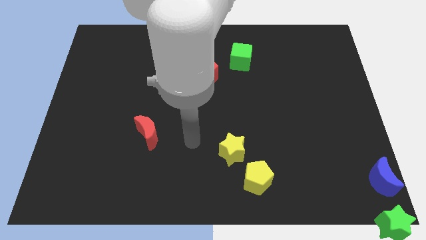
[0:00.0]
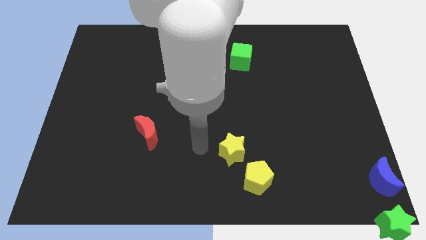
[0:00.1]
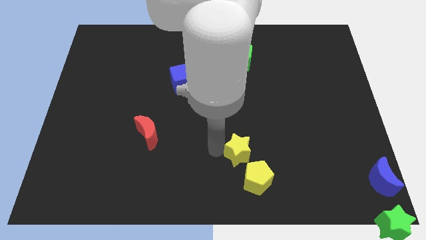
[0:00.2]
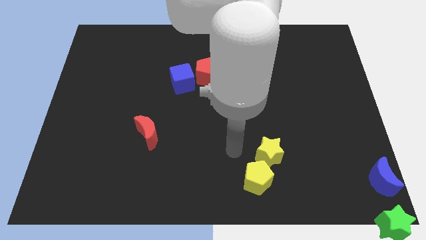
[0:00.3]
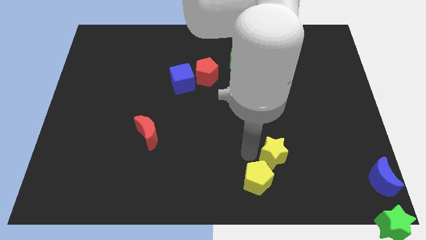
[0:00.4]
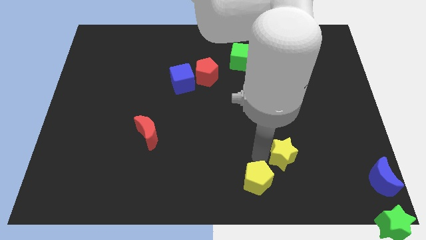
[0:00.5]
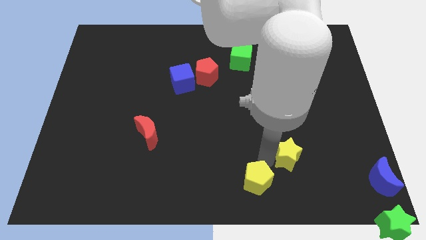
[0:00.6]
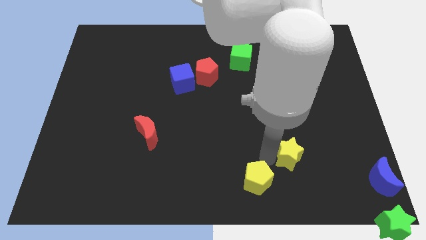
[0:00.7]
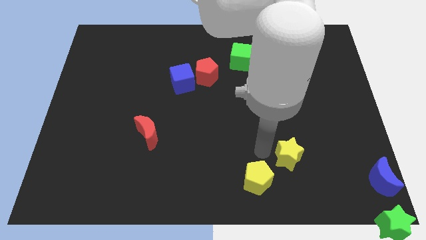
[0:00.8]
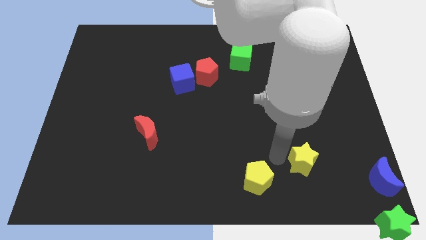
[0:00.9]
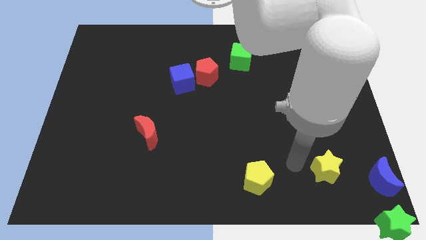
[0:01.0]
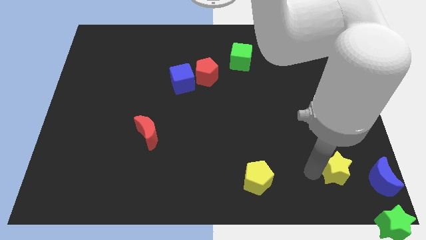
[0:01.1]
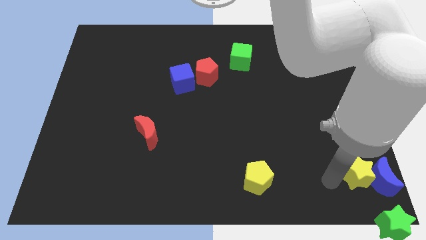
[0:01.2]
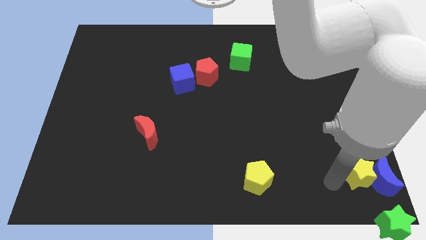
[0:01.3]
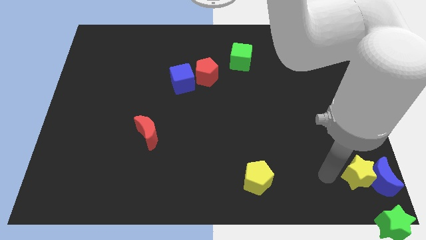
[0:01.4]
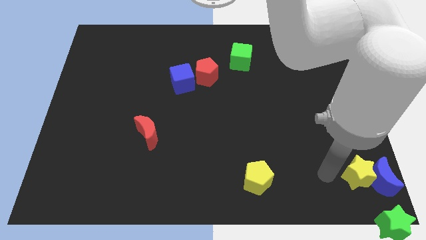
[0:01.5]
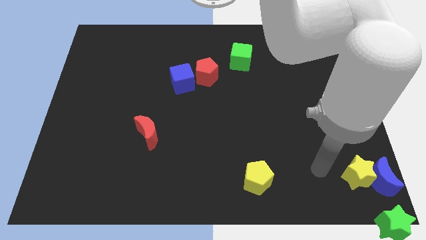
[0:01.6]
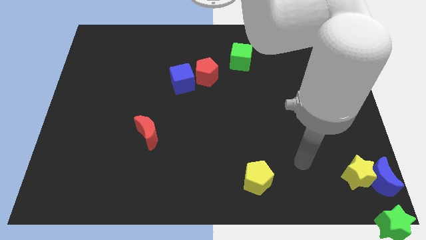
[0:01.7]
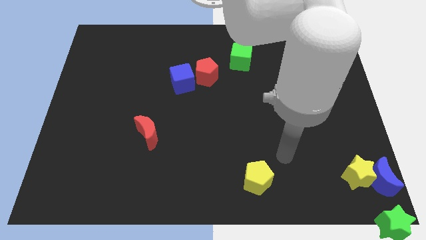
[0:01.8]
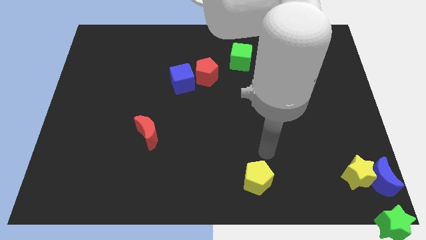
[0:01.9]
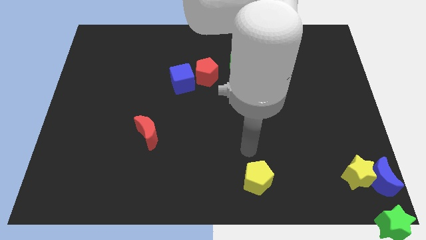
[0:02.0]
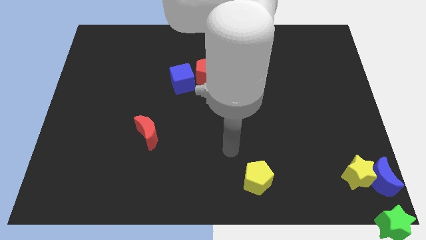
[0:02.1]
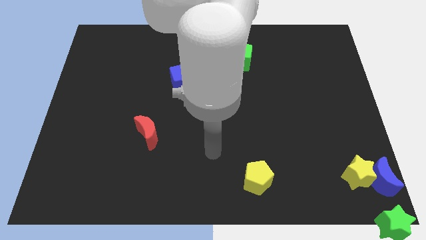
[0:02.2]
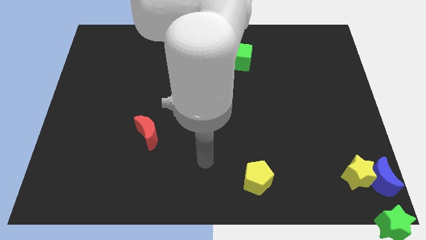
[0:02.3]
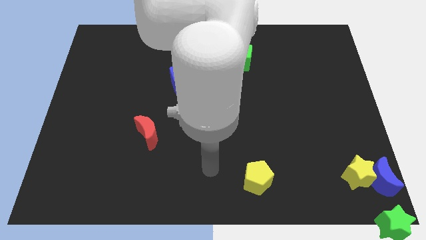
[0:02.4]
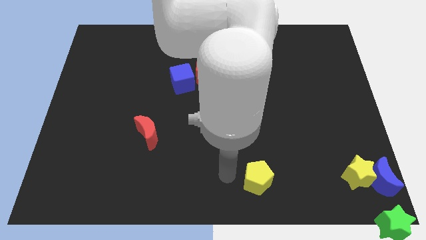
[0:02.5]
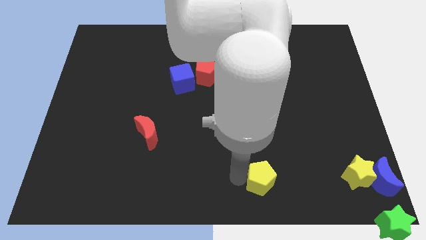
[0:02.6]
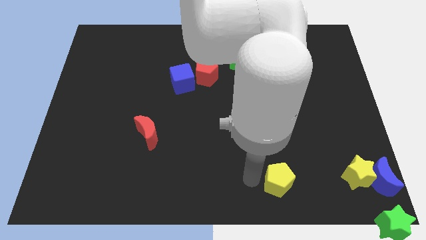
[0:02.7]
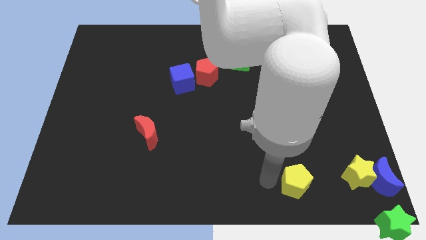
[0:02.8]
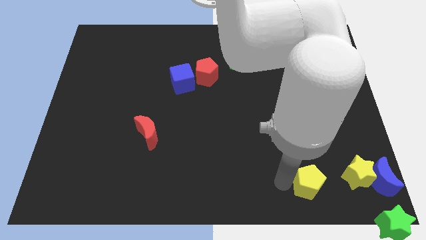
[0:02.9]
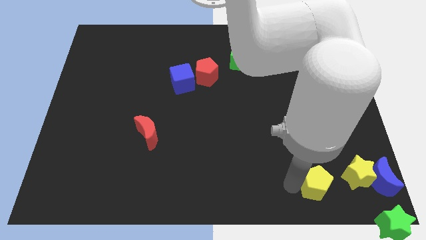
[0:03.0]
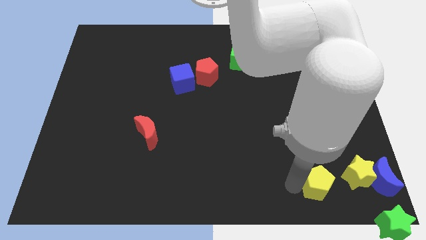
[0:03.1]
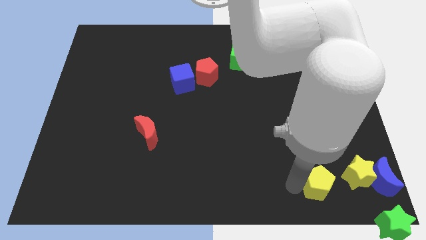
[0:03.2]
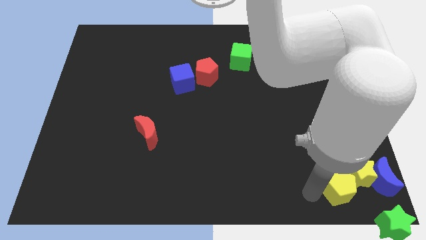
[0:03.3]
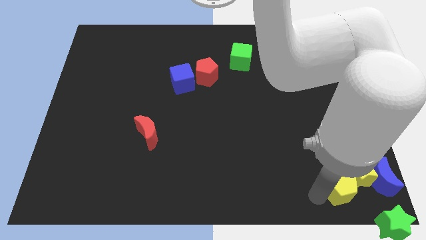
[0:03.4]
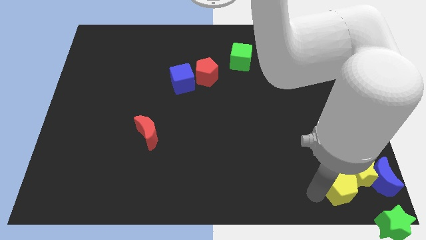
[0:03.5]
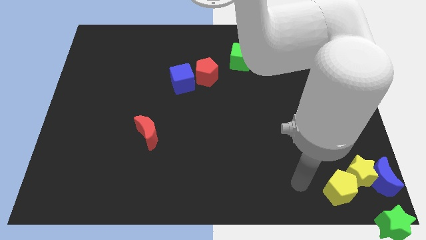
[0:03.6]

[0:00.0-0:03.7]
move both the yellow blocks to the bottom right corner of the board

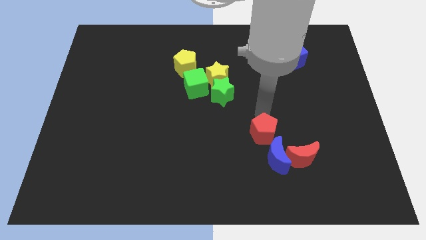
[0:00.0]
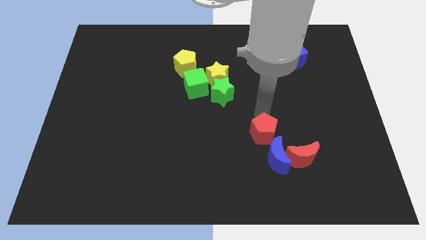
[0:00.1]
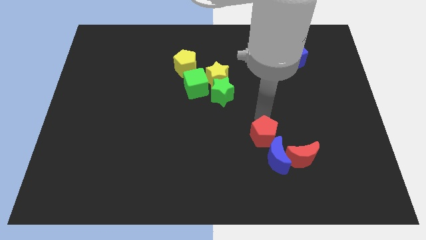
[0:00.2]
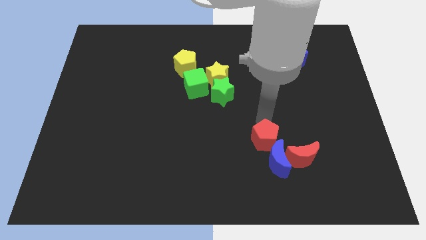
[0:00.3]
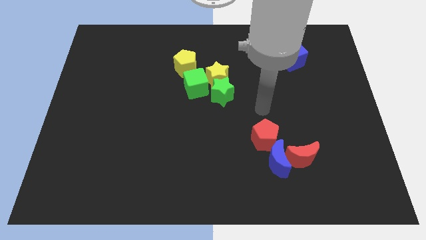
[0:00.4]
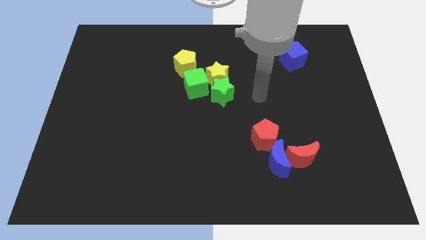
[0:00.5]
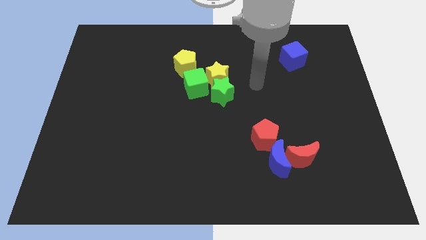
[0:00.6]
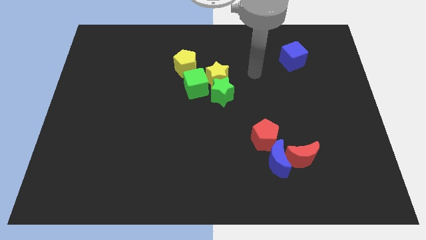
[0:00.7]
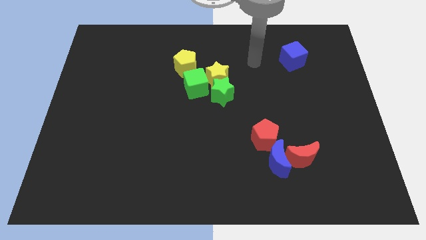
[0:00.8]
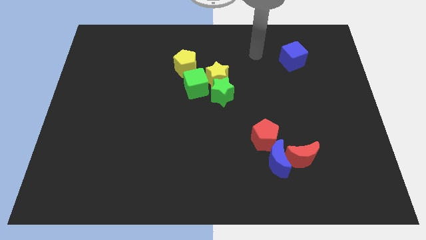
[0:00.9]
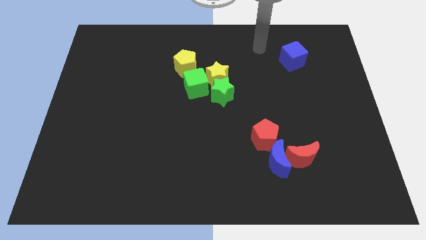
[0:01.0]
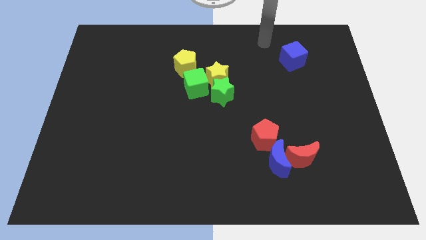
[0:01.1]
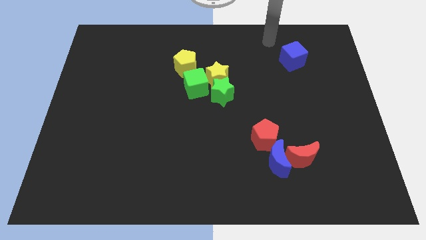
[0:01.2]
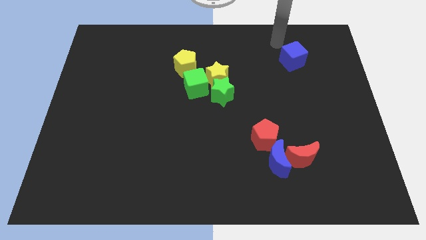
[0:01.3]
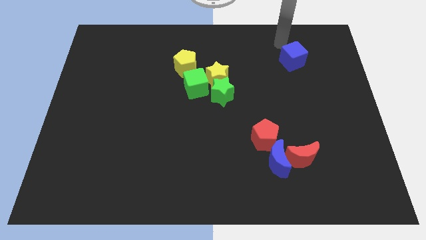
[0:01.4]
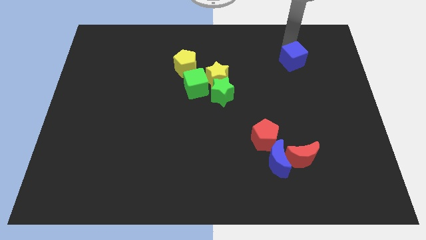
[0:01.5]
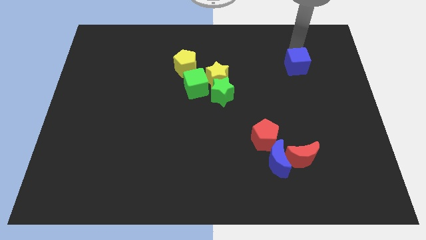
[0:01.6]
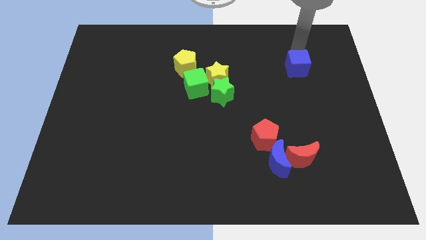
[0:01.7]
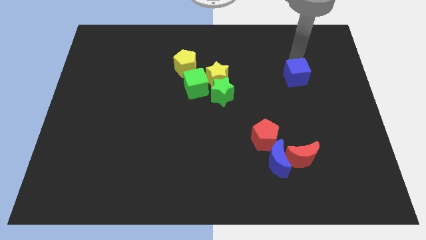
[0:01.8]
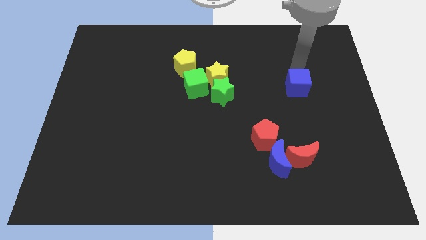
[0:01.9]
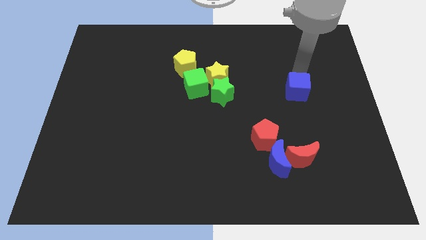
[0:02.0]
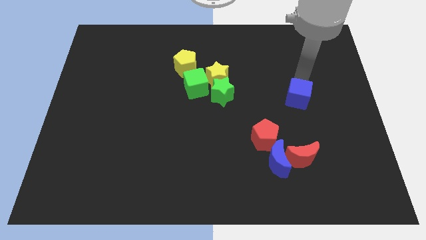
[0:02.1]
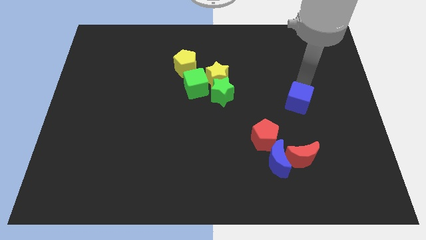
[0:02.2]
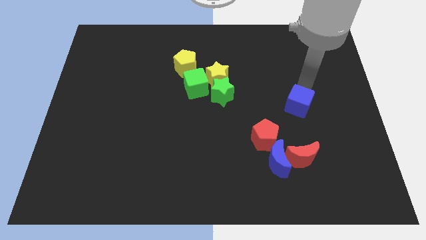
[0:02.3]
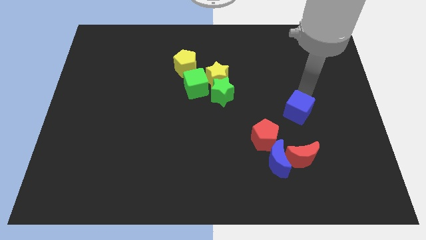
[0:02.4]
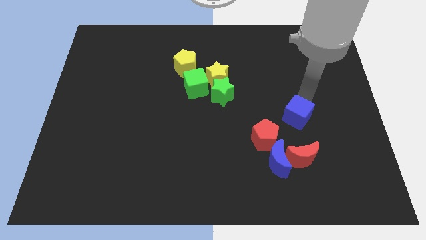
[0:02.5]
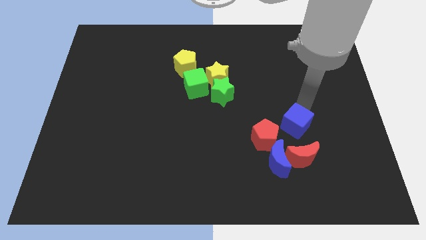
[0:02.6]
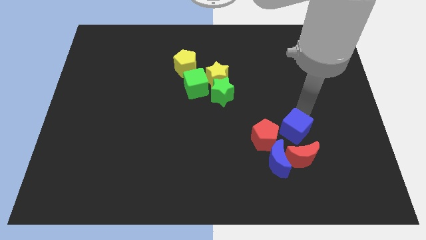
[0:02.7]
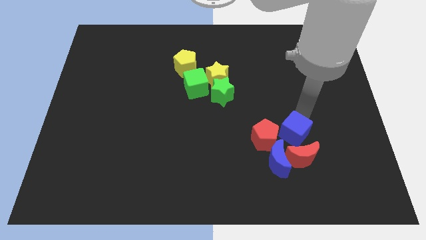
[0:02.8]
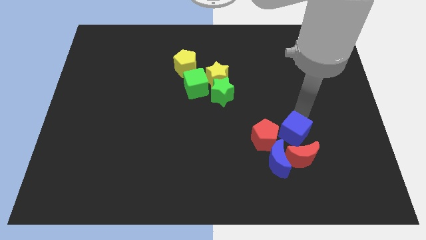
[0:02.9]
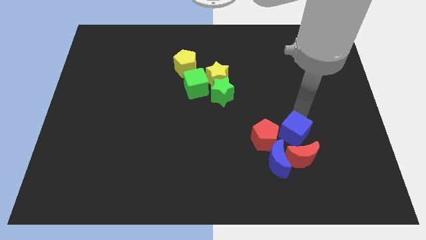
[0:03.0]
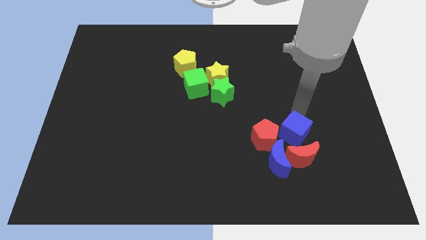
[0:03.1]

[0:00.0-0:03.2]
move the blue cube close to the red pentagon

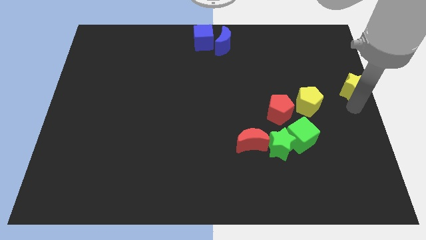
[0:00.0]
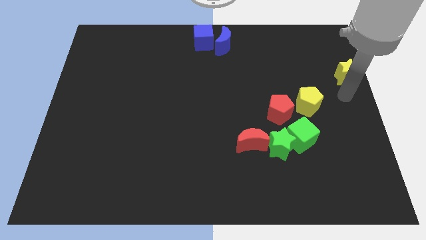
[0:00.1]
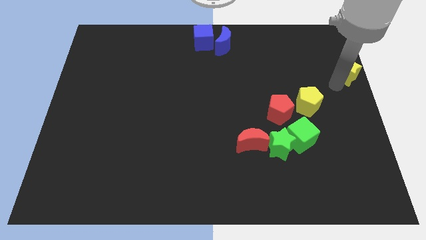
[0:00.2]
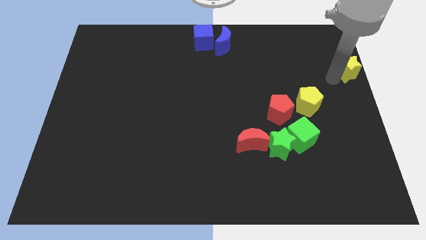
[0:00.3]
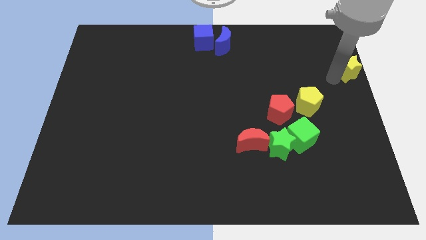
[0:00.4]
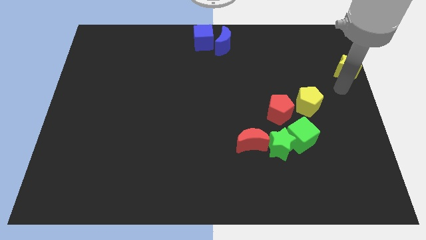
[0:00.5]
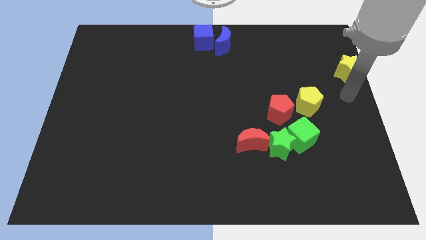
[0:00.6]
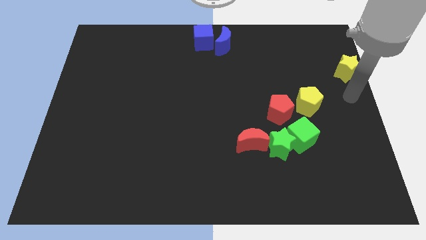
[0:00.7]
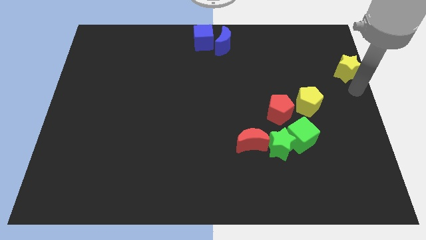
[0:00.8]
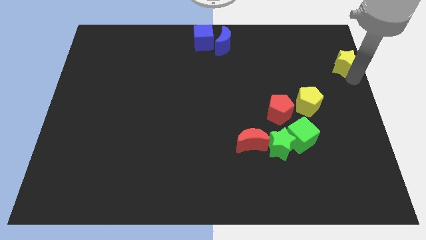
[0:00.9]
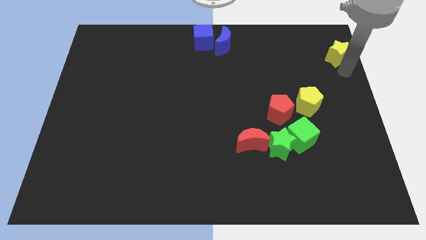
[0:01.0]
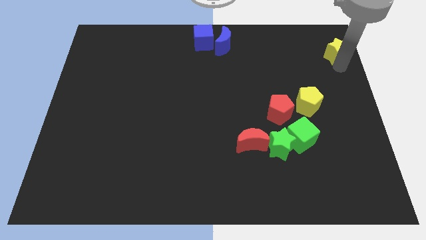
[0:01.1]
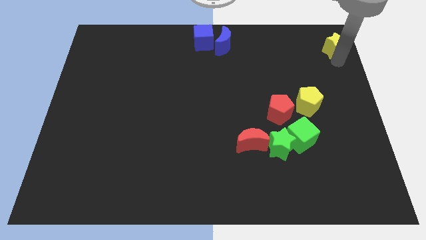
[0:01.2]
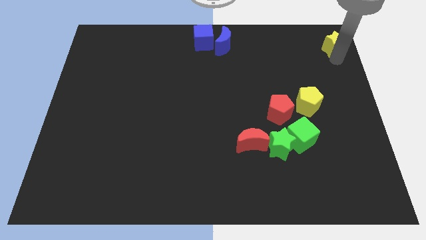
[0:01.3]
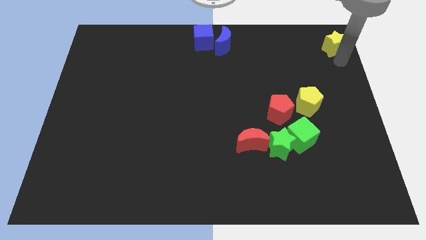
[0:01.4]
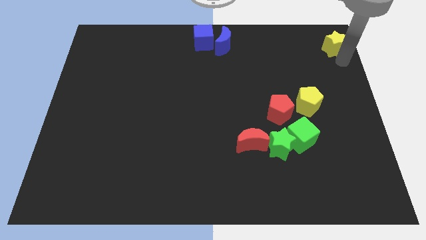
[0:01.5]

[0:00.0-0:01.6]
move the yellow star to the top right corner

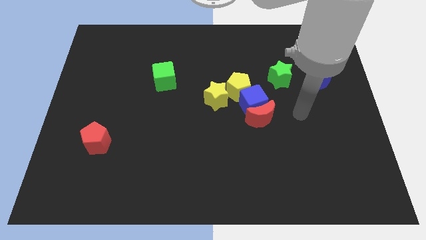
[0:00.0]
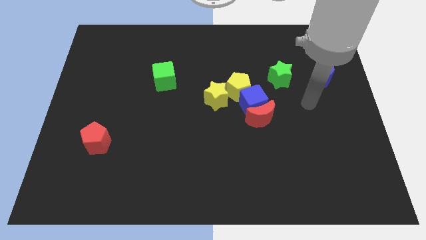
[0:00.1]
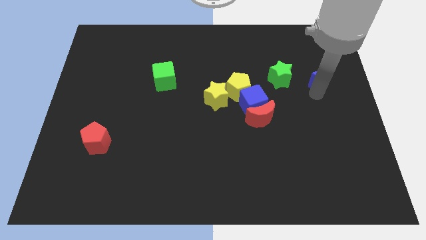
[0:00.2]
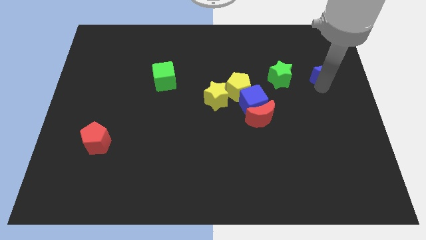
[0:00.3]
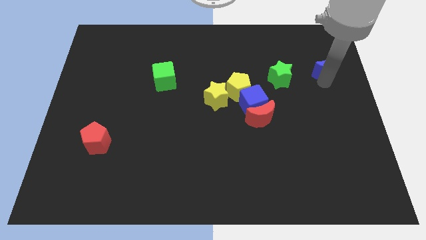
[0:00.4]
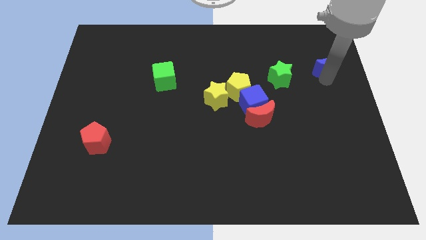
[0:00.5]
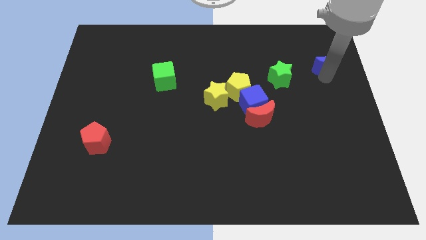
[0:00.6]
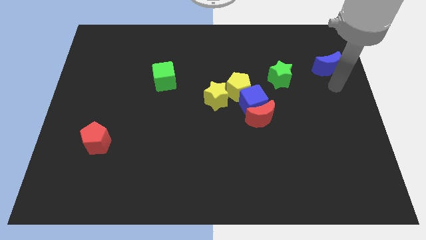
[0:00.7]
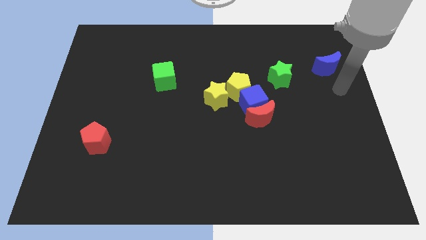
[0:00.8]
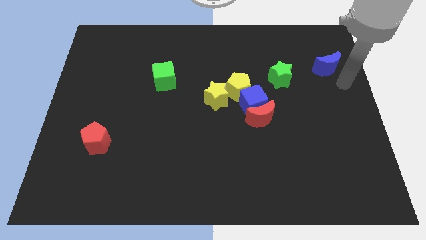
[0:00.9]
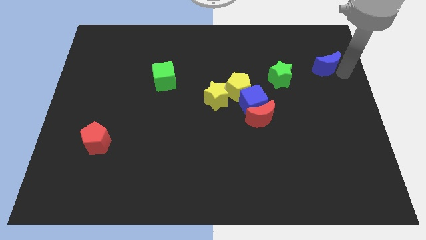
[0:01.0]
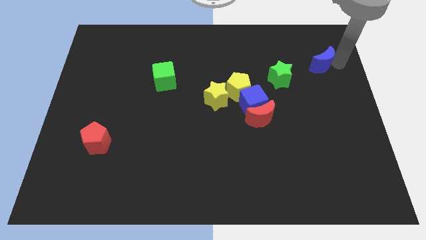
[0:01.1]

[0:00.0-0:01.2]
push the blue moon slightly to the top right corner of
